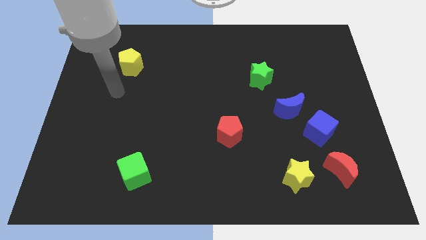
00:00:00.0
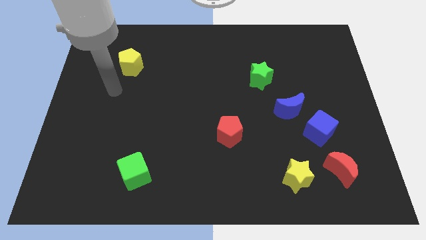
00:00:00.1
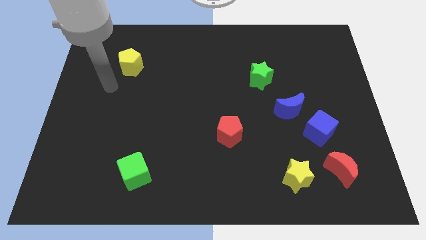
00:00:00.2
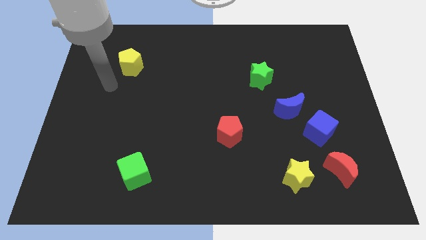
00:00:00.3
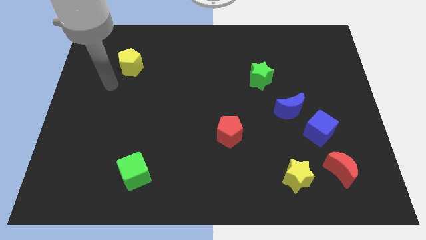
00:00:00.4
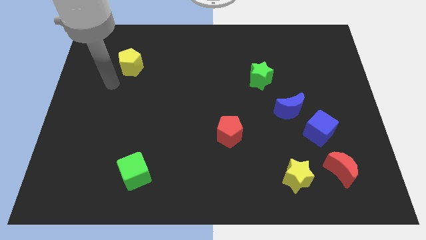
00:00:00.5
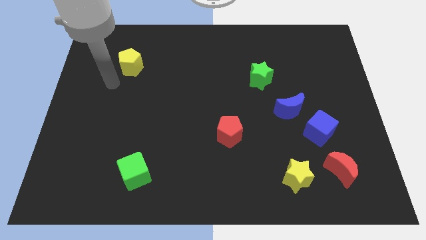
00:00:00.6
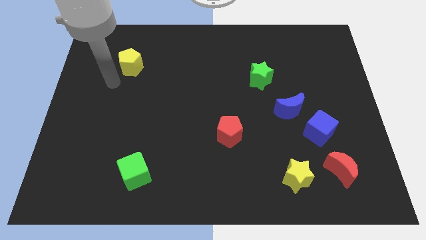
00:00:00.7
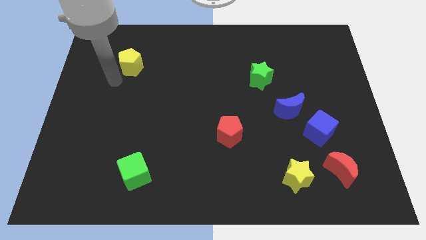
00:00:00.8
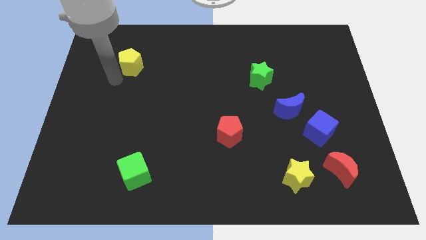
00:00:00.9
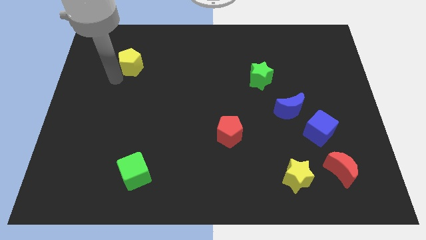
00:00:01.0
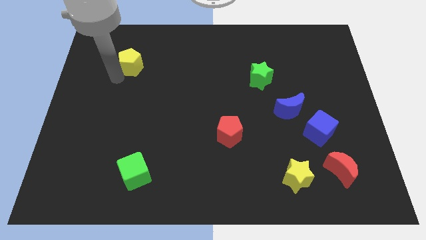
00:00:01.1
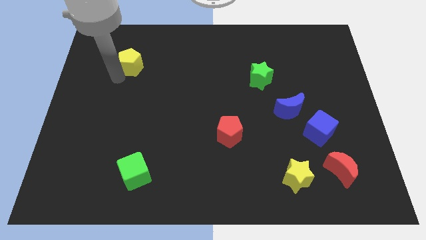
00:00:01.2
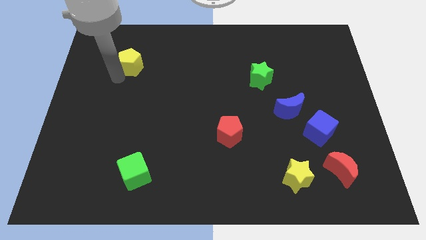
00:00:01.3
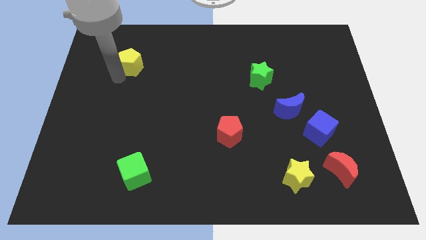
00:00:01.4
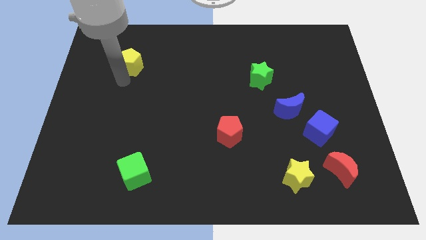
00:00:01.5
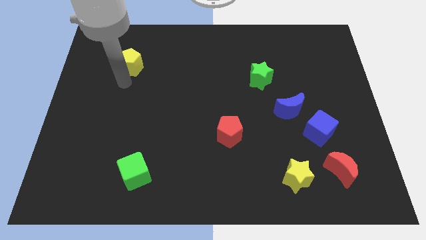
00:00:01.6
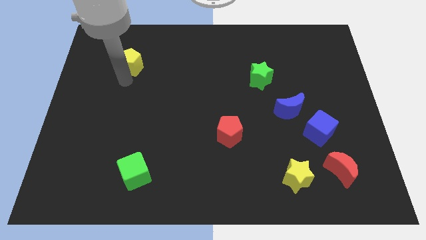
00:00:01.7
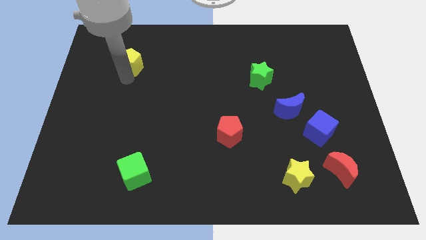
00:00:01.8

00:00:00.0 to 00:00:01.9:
move your arm towards the bottom of the yellow pentagon

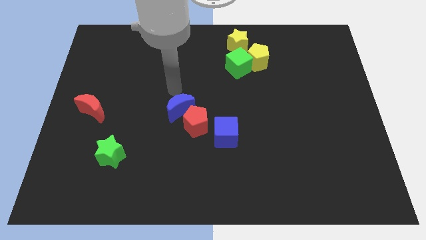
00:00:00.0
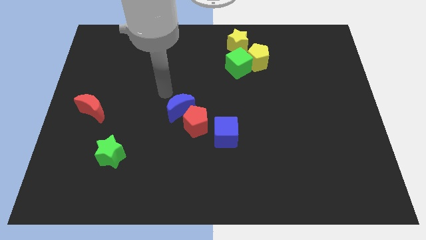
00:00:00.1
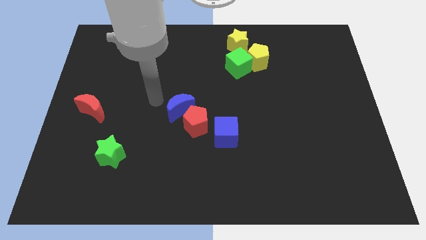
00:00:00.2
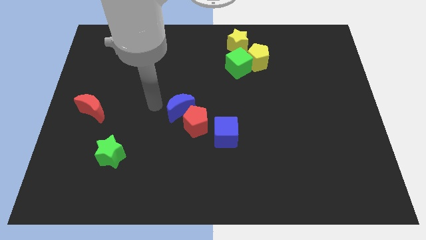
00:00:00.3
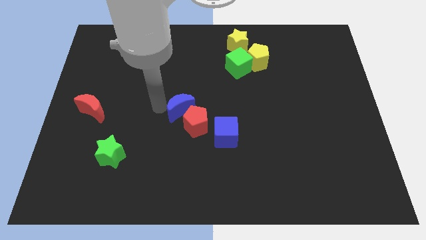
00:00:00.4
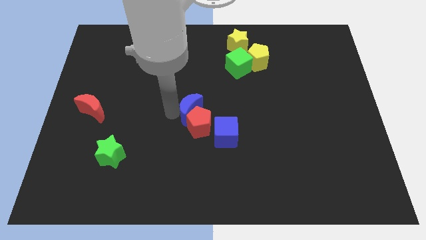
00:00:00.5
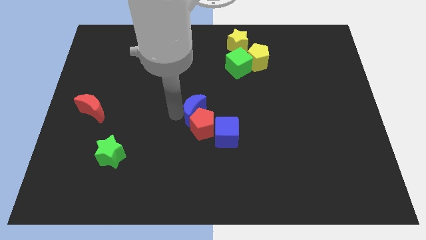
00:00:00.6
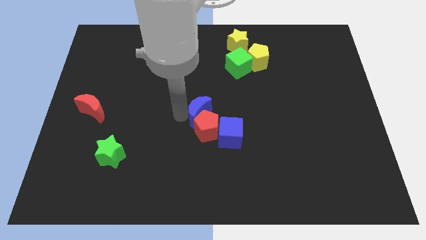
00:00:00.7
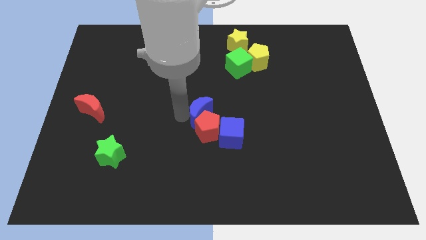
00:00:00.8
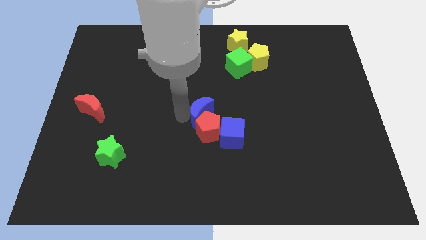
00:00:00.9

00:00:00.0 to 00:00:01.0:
push the blue crescent along with the red pentagon near to the blue cube

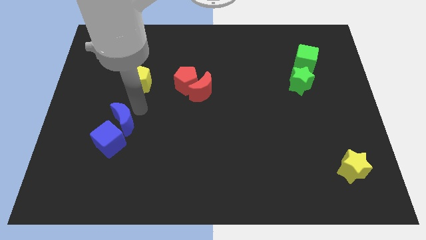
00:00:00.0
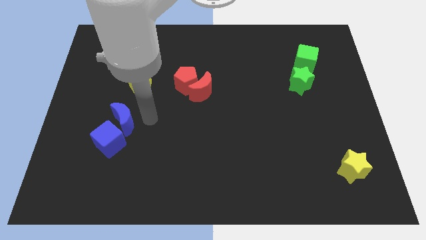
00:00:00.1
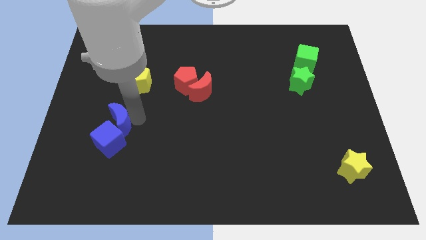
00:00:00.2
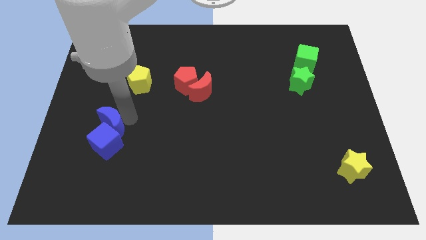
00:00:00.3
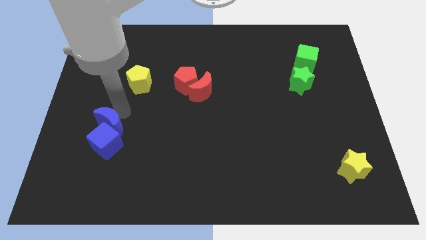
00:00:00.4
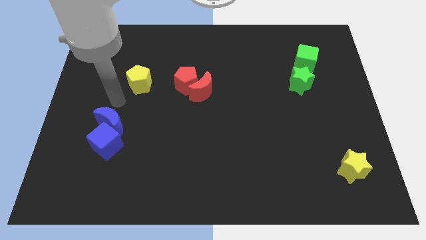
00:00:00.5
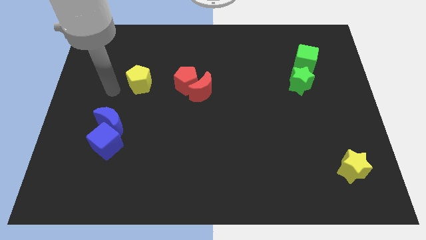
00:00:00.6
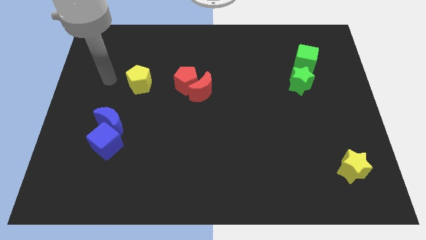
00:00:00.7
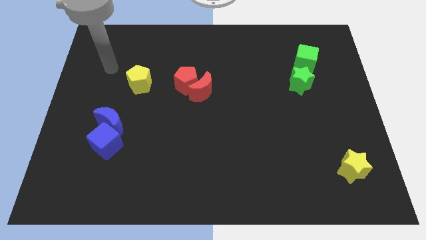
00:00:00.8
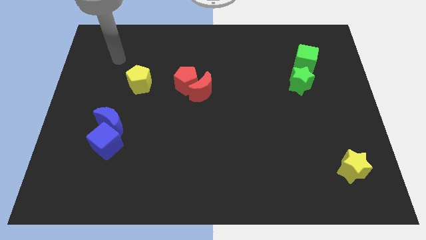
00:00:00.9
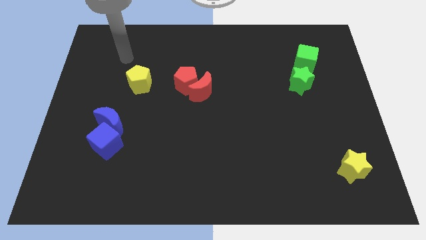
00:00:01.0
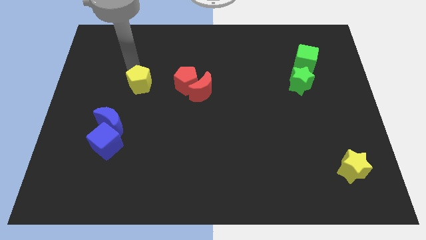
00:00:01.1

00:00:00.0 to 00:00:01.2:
move the blue moon into the blue cube

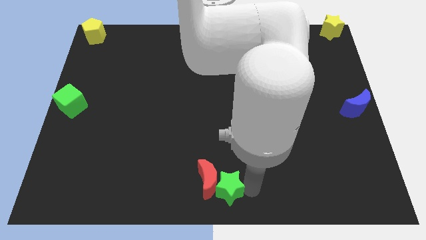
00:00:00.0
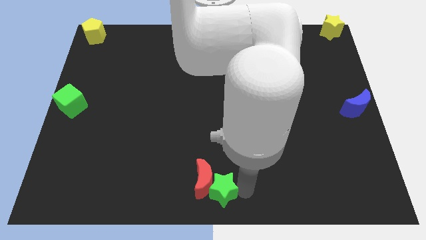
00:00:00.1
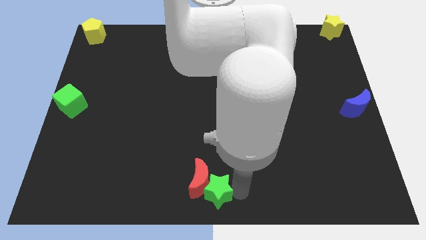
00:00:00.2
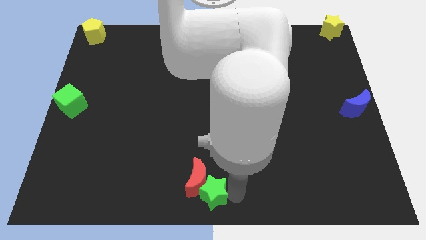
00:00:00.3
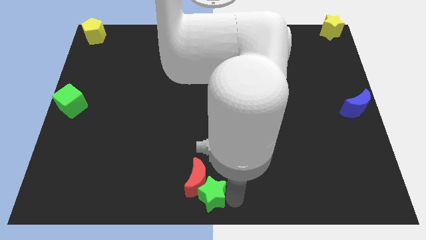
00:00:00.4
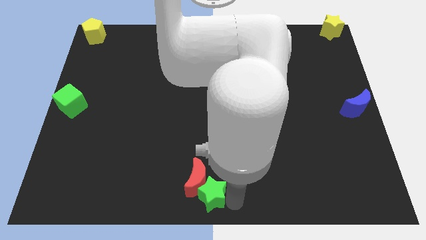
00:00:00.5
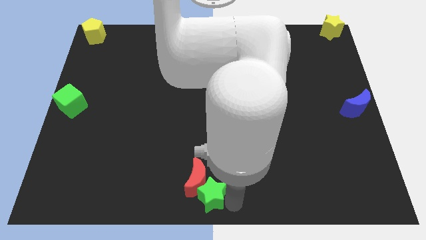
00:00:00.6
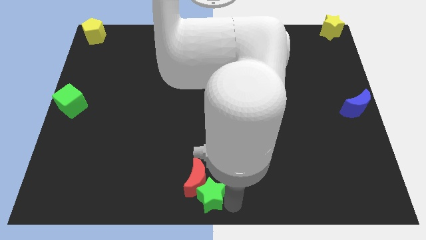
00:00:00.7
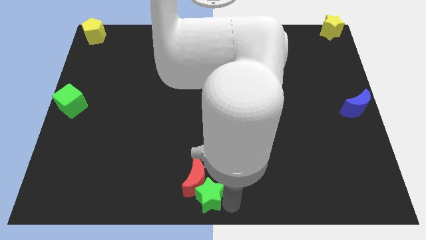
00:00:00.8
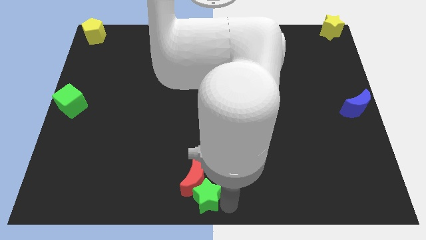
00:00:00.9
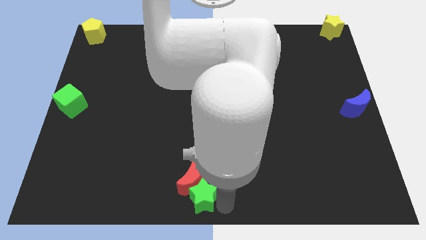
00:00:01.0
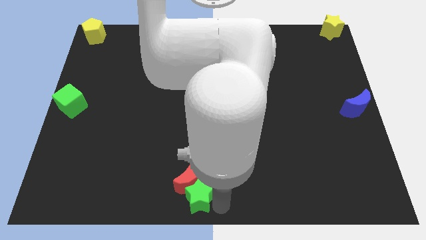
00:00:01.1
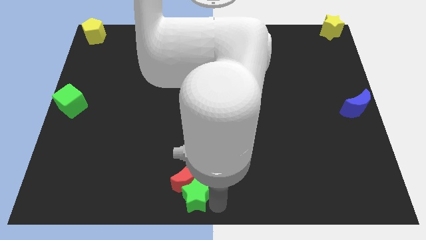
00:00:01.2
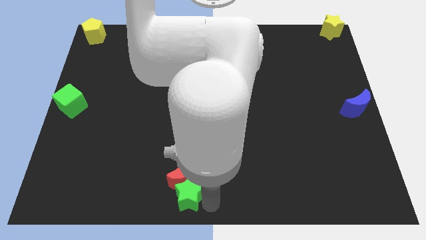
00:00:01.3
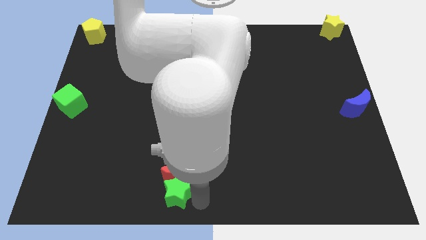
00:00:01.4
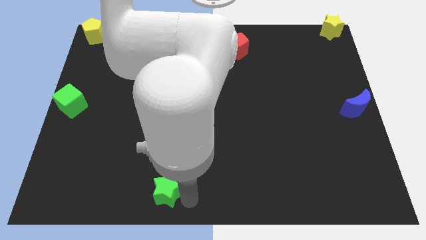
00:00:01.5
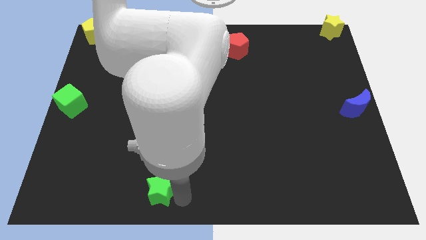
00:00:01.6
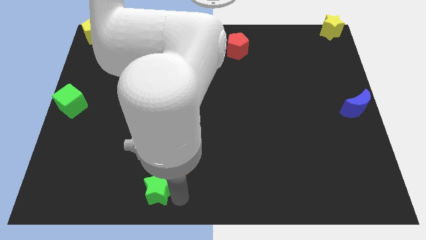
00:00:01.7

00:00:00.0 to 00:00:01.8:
push the green star to the bottom left to the red crescent

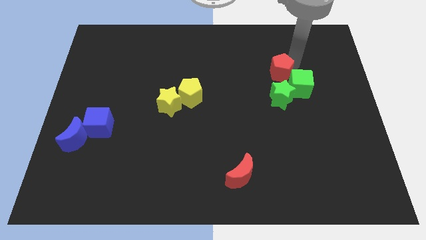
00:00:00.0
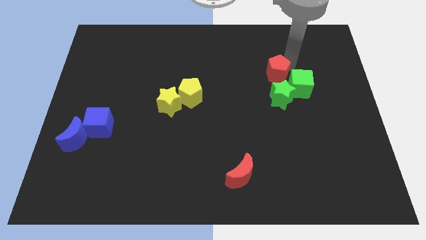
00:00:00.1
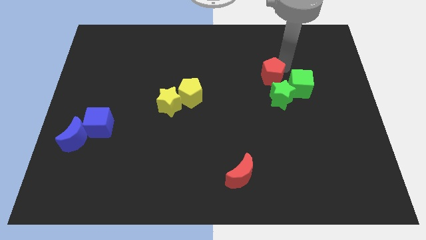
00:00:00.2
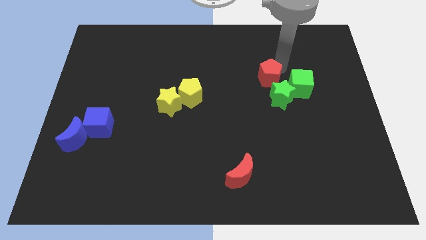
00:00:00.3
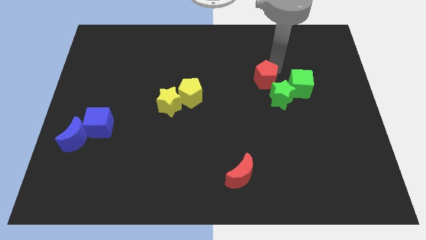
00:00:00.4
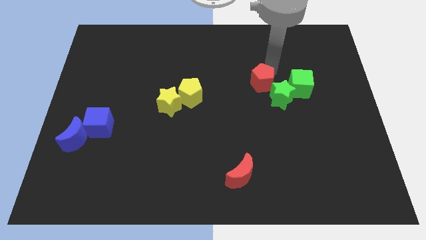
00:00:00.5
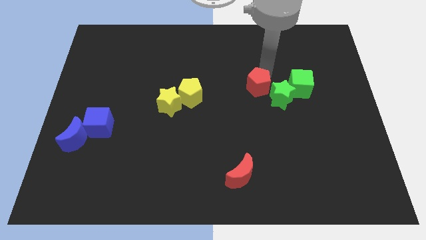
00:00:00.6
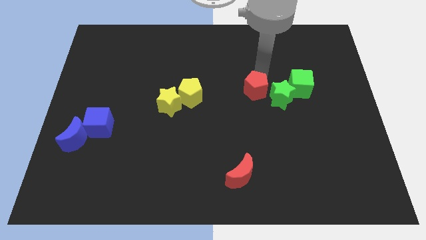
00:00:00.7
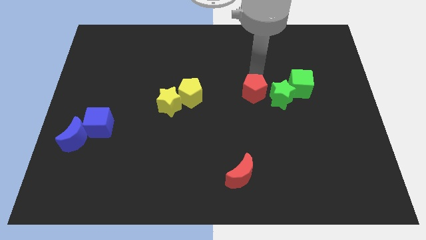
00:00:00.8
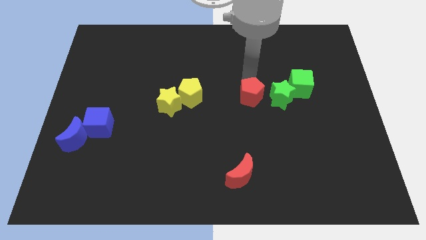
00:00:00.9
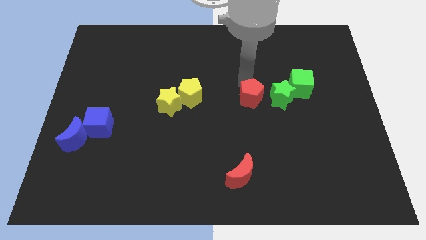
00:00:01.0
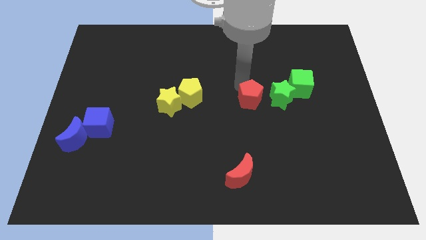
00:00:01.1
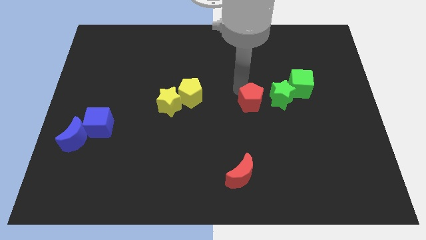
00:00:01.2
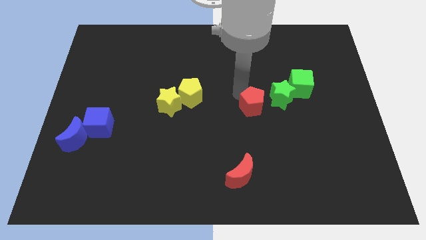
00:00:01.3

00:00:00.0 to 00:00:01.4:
place the red pentagon to the left side of green star

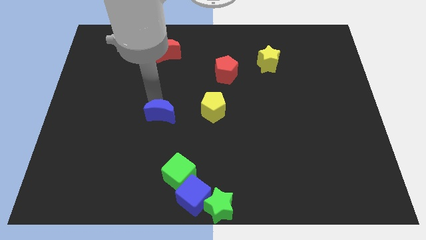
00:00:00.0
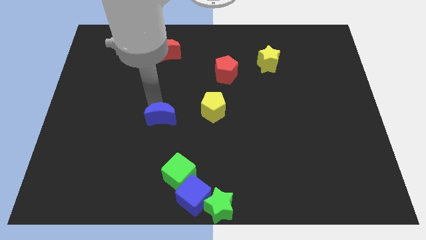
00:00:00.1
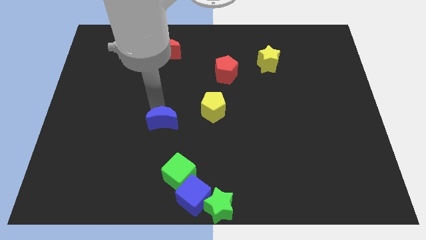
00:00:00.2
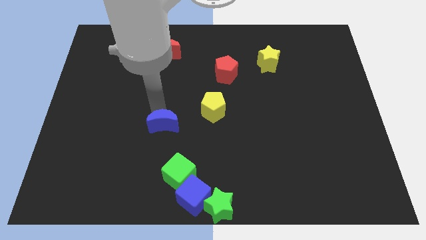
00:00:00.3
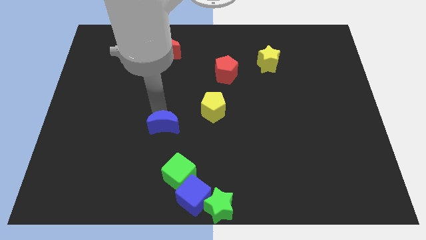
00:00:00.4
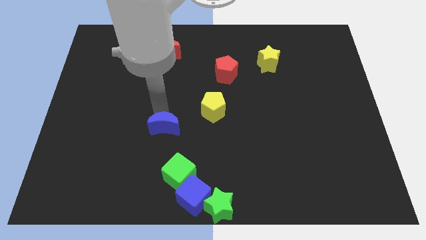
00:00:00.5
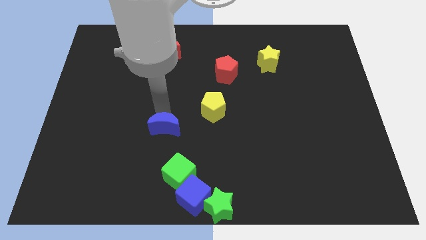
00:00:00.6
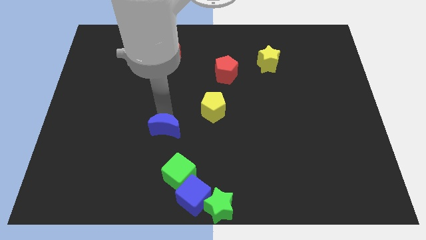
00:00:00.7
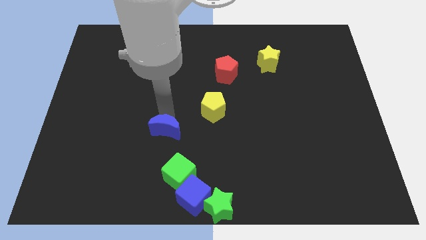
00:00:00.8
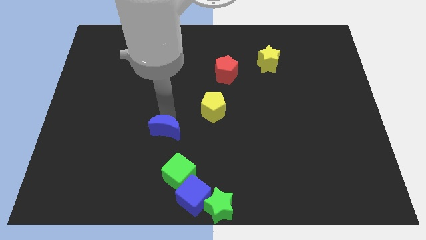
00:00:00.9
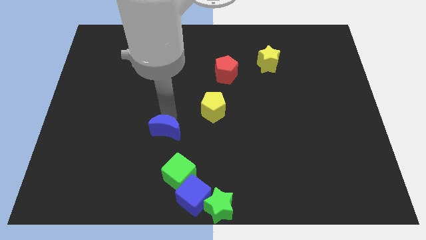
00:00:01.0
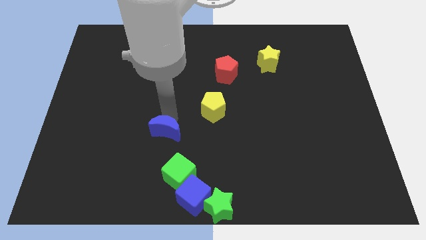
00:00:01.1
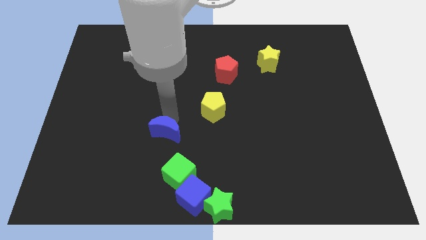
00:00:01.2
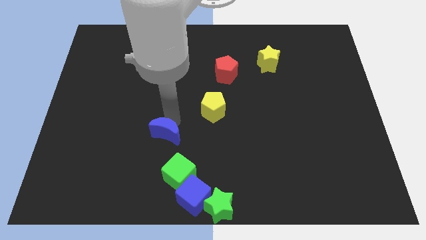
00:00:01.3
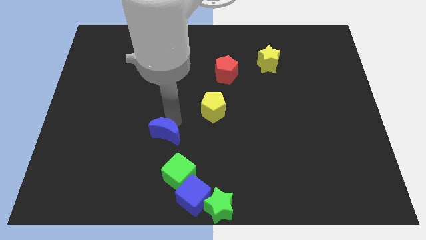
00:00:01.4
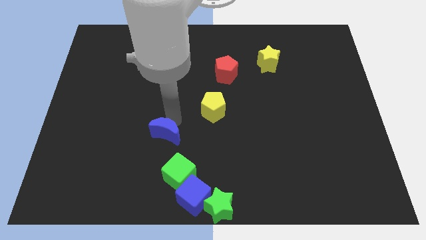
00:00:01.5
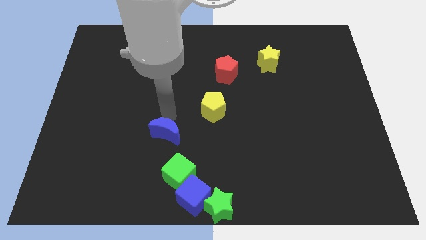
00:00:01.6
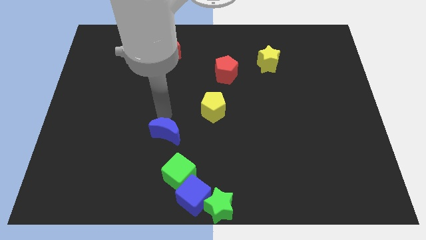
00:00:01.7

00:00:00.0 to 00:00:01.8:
push the blue crescent towards green cube
